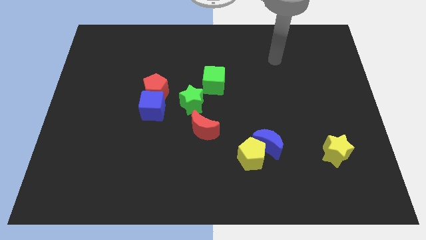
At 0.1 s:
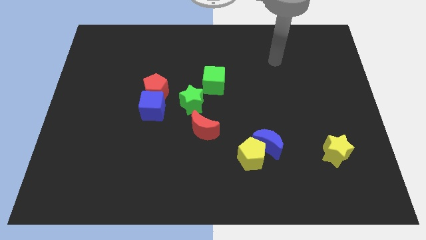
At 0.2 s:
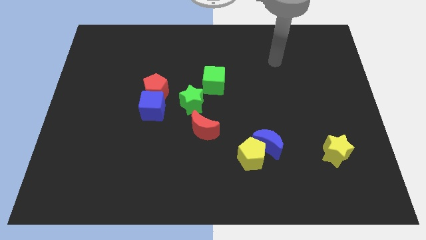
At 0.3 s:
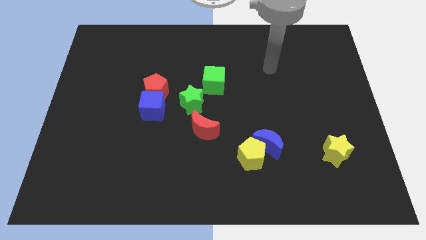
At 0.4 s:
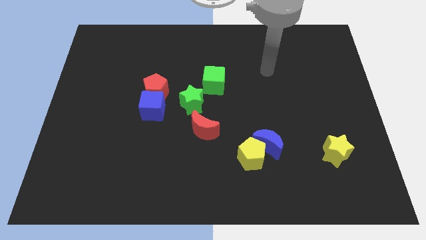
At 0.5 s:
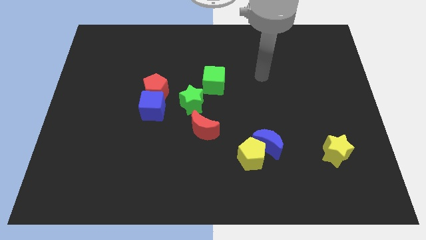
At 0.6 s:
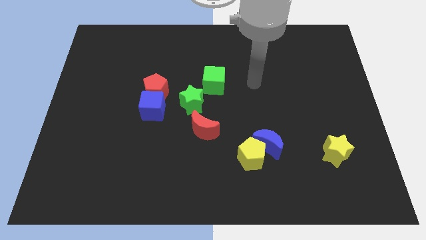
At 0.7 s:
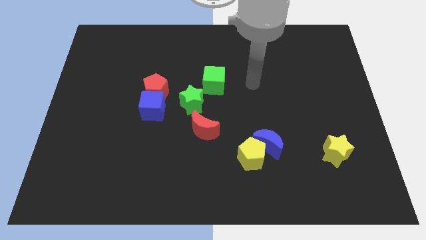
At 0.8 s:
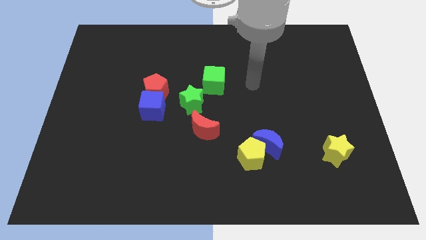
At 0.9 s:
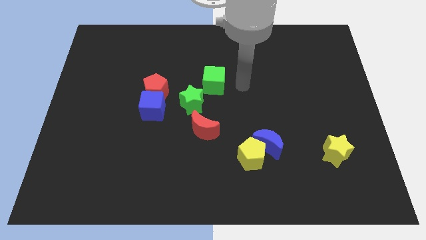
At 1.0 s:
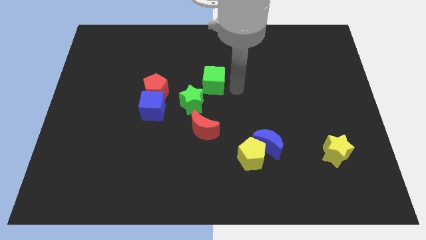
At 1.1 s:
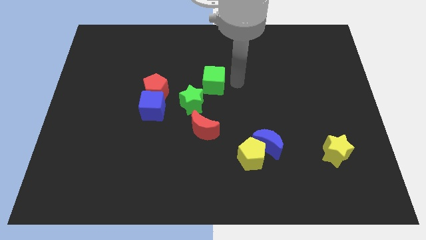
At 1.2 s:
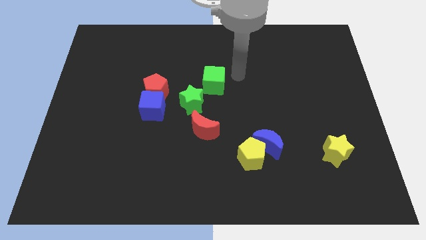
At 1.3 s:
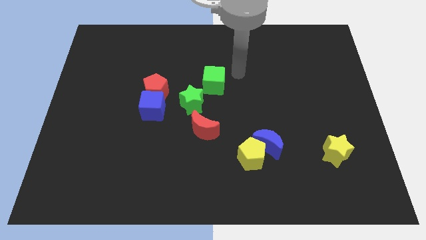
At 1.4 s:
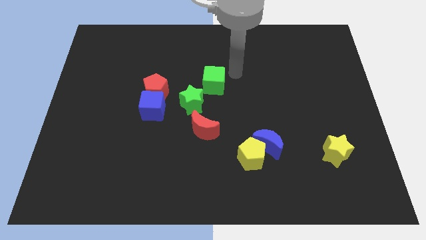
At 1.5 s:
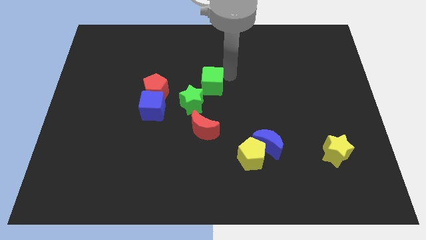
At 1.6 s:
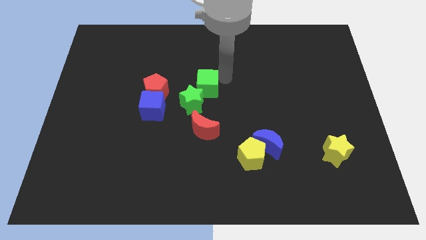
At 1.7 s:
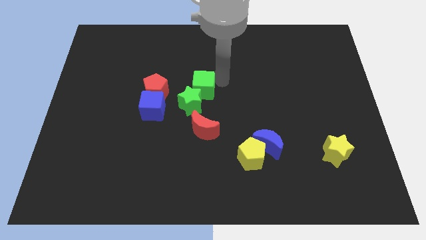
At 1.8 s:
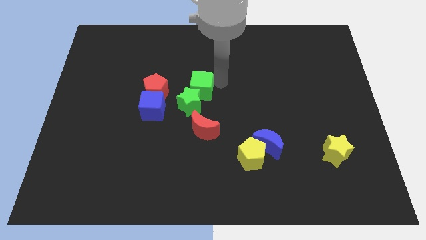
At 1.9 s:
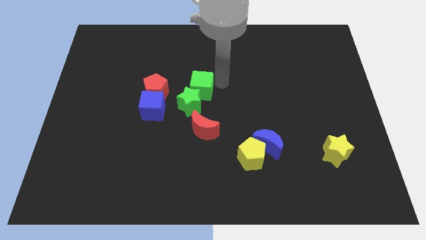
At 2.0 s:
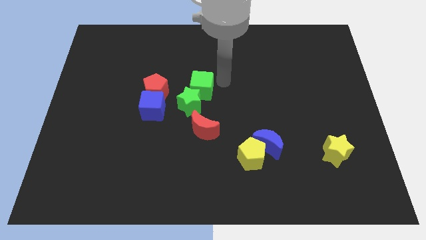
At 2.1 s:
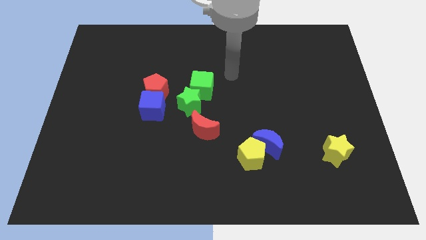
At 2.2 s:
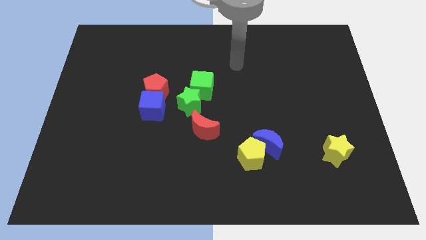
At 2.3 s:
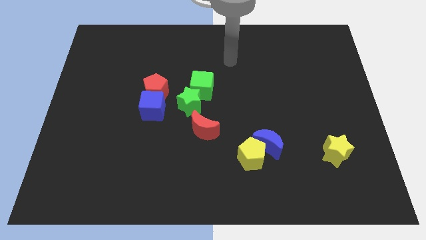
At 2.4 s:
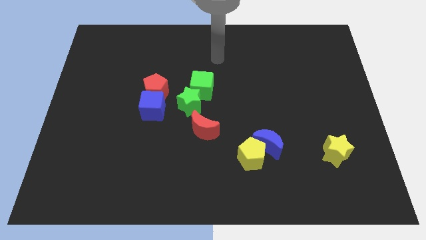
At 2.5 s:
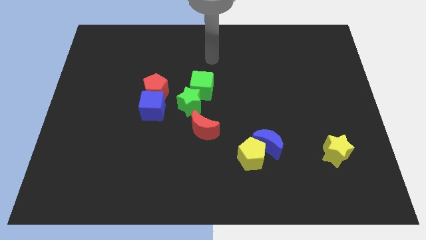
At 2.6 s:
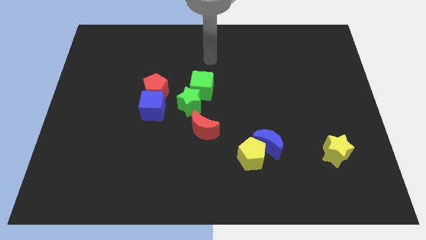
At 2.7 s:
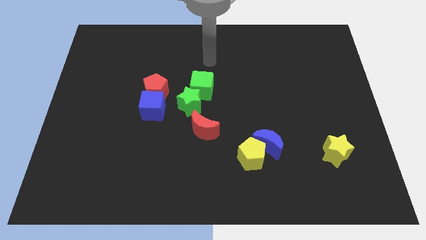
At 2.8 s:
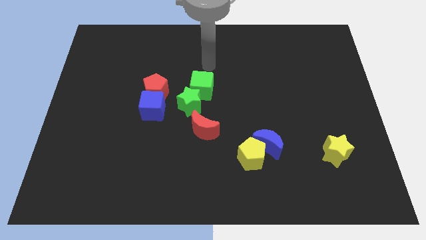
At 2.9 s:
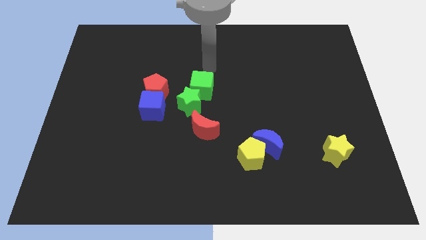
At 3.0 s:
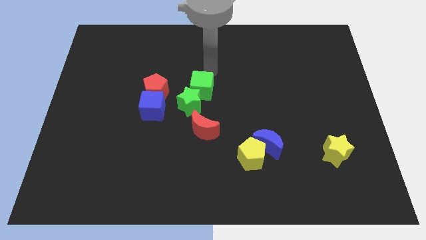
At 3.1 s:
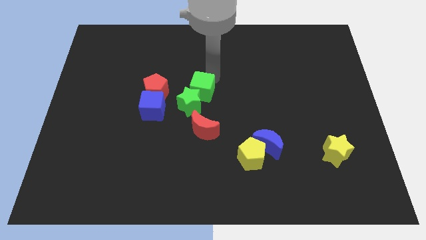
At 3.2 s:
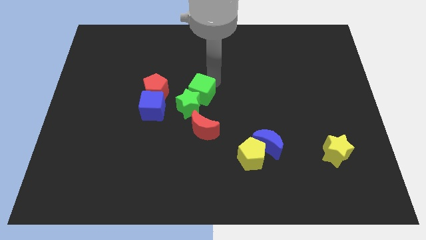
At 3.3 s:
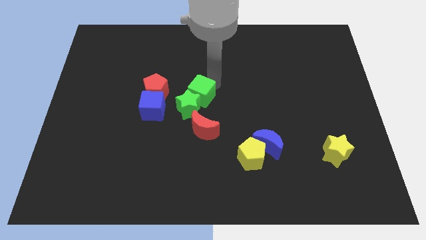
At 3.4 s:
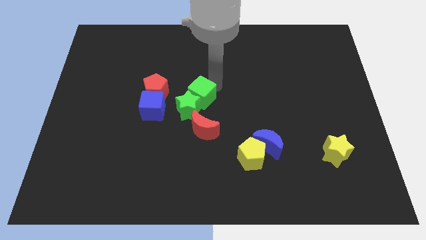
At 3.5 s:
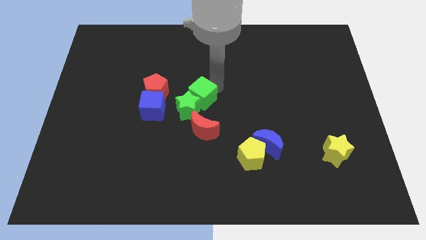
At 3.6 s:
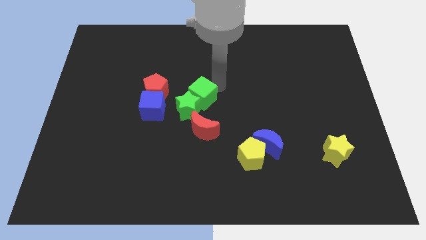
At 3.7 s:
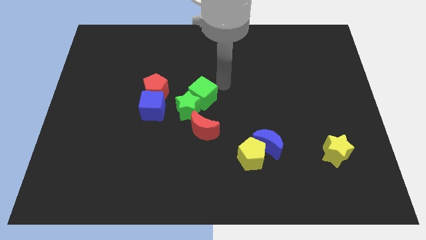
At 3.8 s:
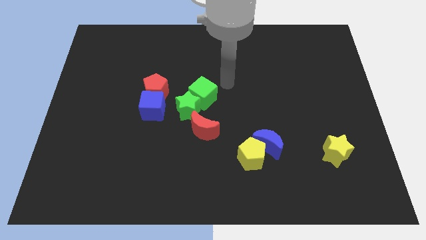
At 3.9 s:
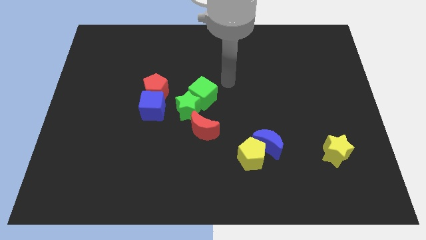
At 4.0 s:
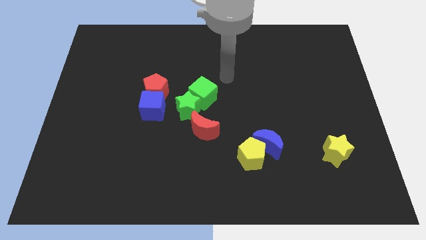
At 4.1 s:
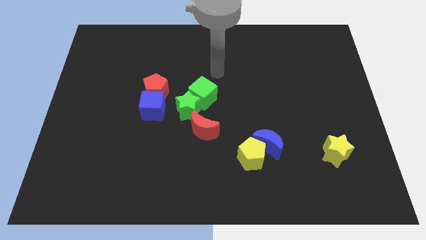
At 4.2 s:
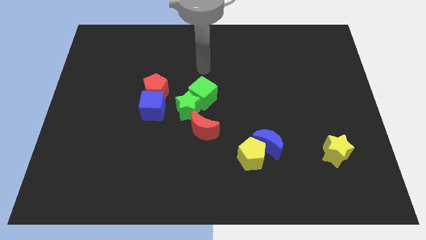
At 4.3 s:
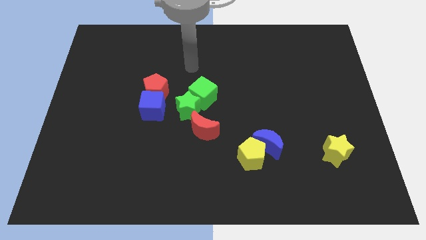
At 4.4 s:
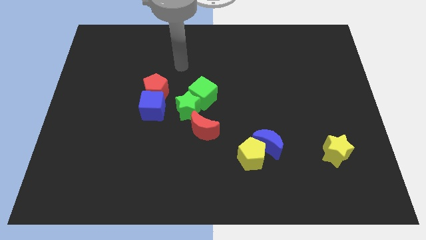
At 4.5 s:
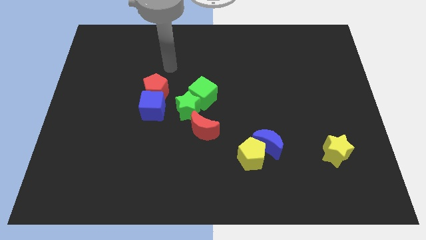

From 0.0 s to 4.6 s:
slightly push the green cube into the green star

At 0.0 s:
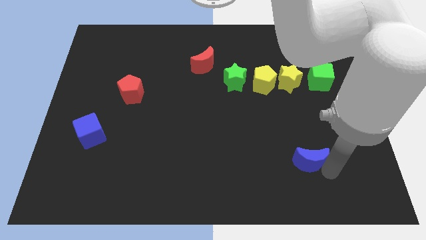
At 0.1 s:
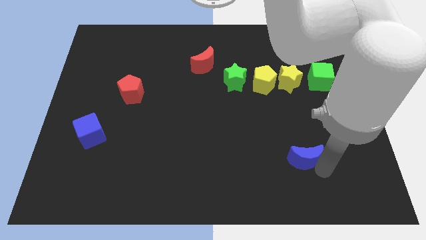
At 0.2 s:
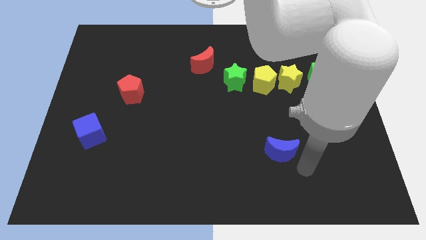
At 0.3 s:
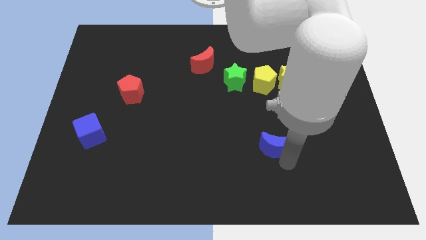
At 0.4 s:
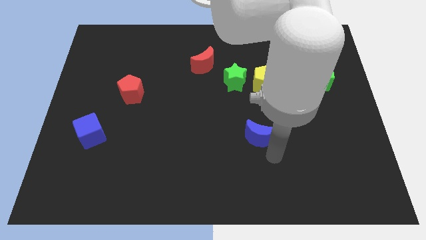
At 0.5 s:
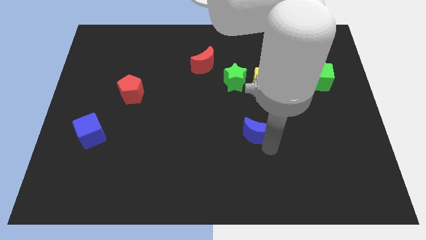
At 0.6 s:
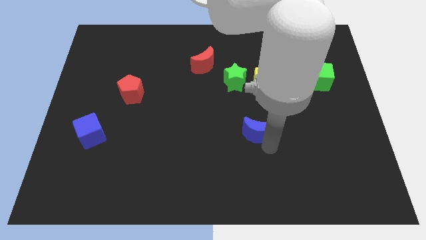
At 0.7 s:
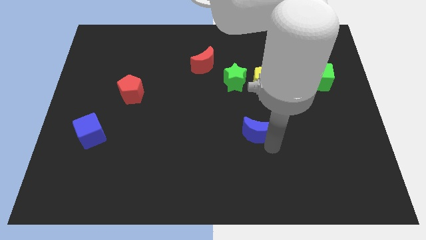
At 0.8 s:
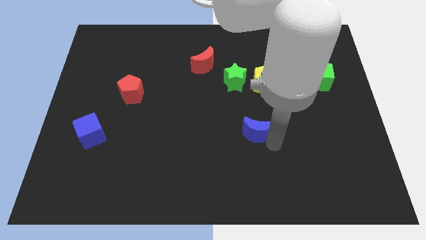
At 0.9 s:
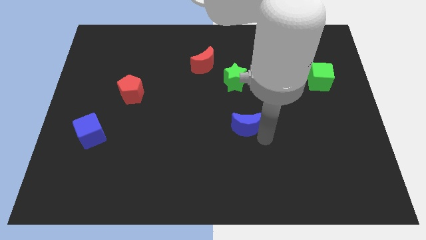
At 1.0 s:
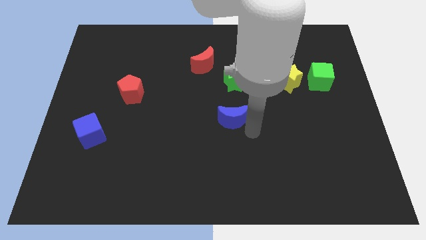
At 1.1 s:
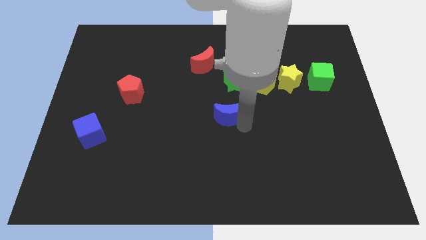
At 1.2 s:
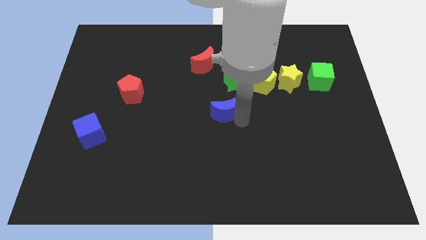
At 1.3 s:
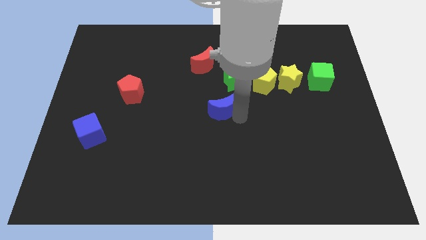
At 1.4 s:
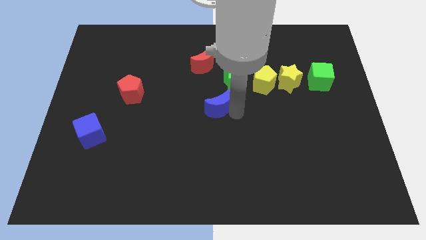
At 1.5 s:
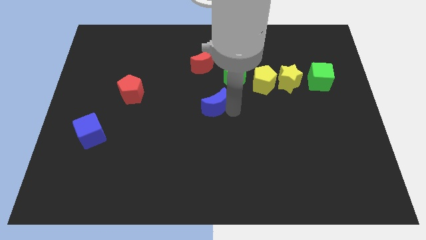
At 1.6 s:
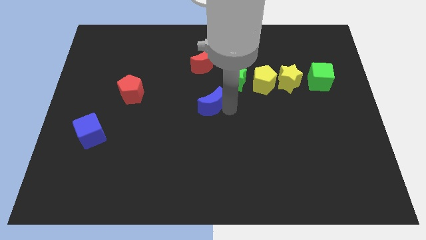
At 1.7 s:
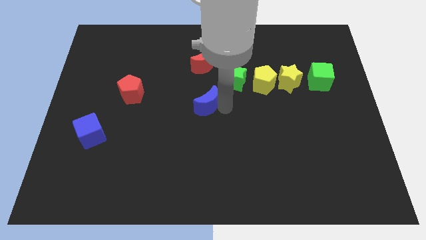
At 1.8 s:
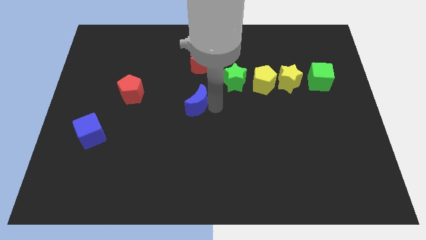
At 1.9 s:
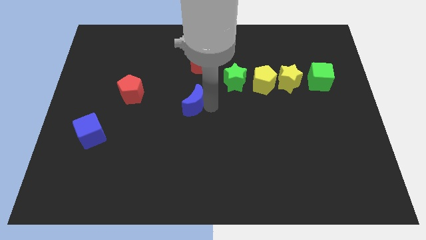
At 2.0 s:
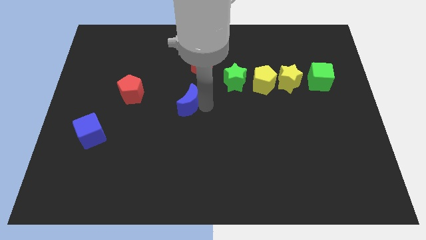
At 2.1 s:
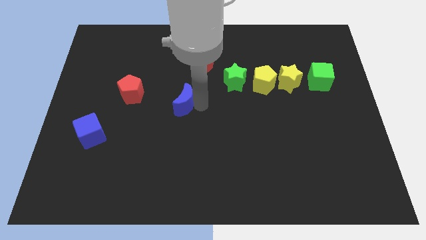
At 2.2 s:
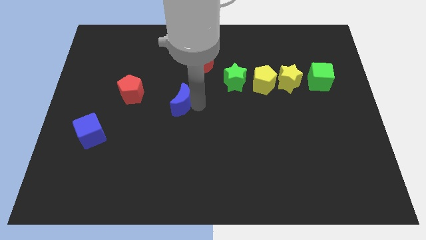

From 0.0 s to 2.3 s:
move the blue crescent towards the red pentagon

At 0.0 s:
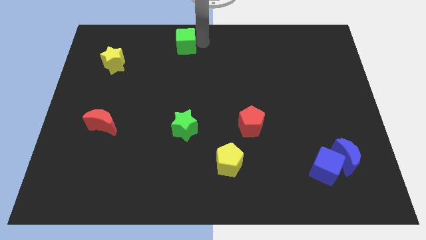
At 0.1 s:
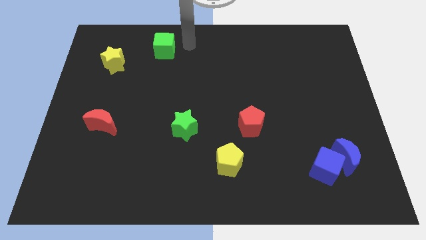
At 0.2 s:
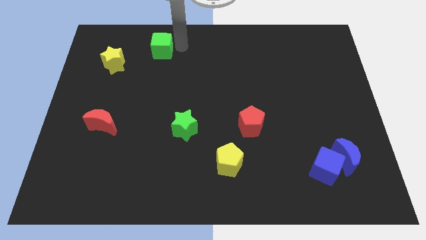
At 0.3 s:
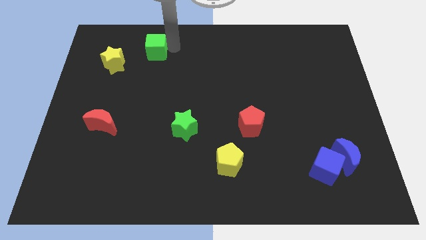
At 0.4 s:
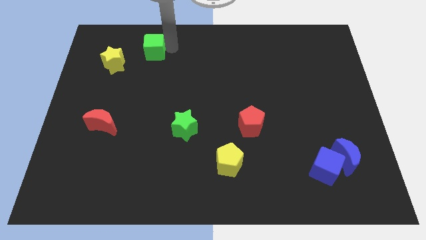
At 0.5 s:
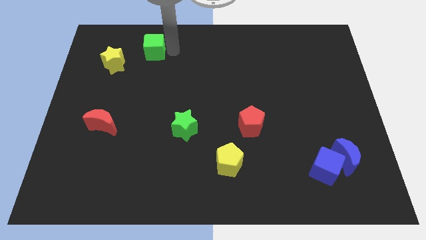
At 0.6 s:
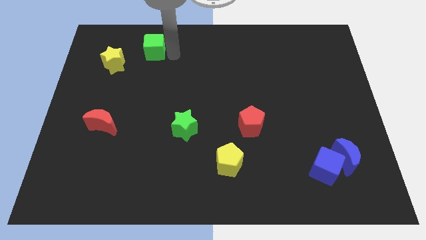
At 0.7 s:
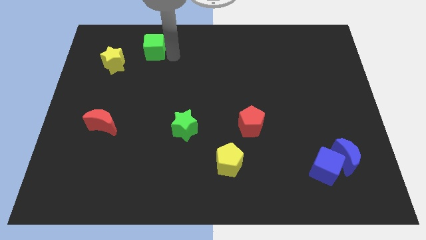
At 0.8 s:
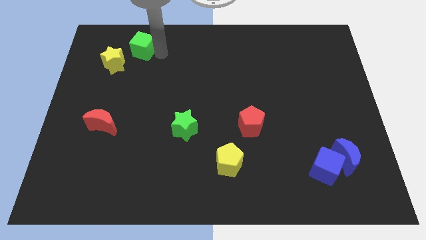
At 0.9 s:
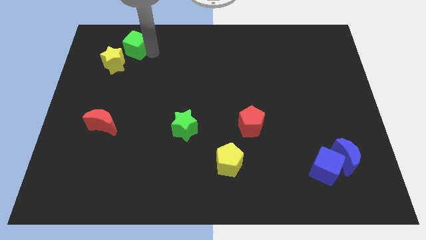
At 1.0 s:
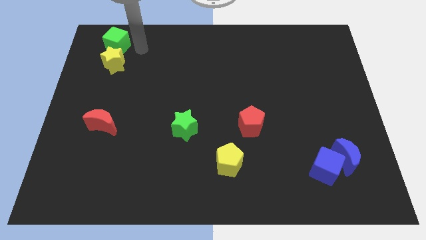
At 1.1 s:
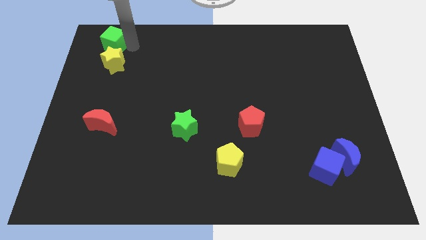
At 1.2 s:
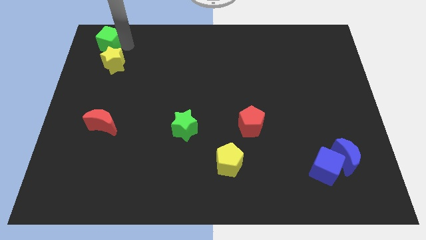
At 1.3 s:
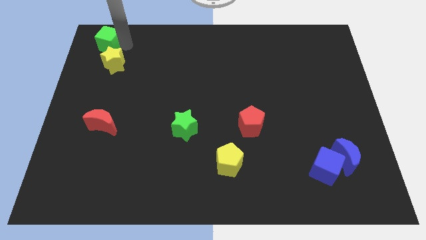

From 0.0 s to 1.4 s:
push green cube above yellow star

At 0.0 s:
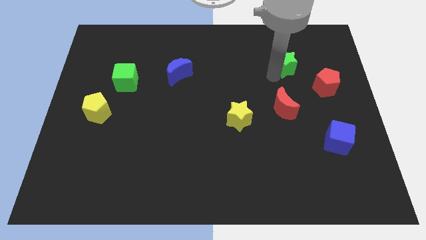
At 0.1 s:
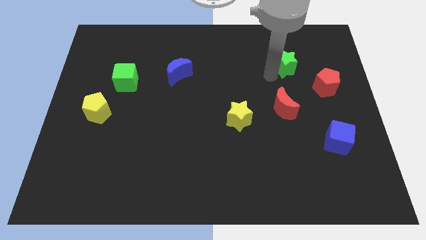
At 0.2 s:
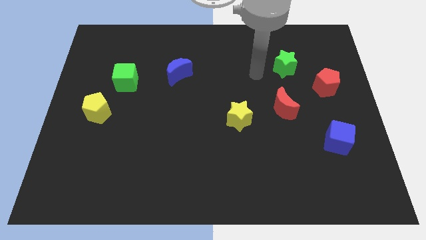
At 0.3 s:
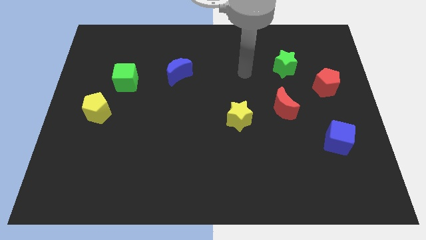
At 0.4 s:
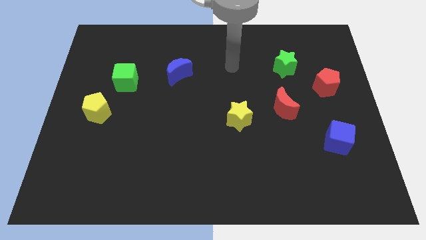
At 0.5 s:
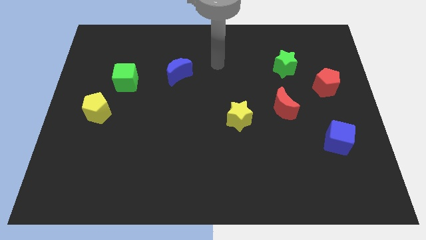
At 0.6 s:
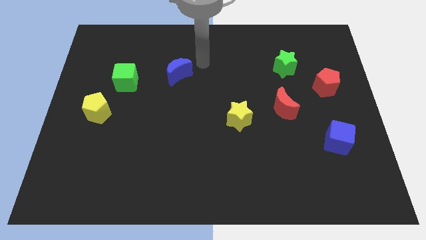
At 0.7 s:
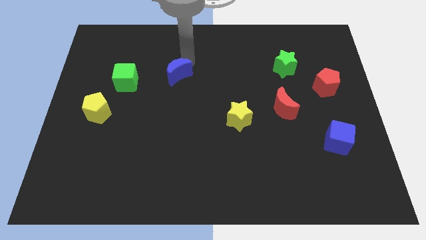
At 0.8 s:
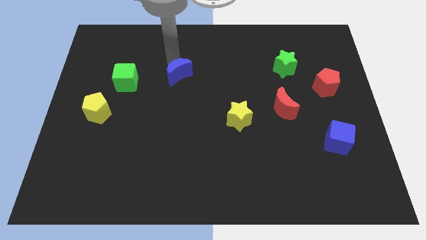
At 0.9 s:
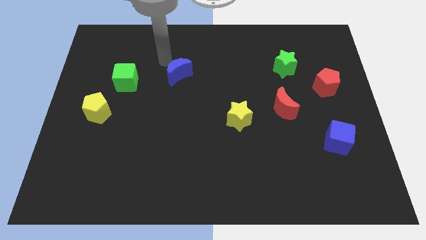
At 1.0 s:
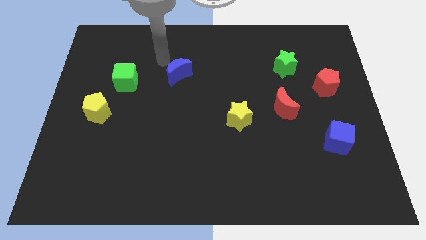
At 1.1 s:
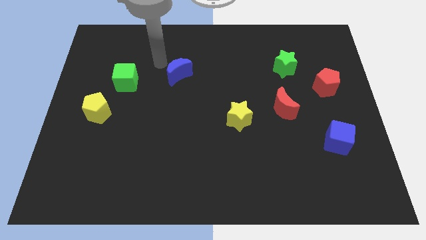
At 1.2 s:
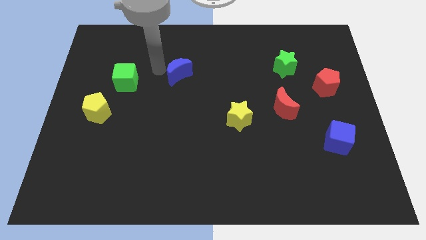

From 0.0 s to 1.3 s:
move your arm away from the green star
